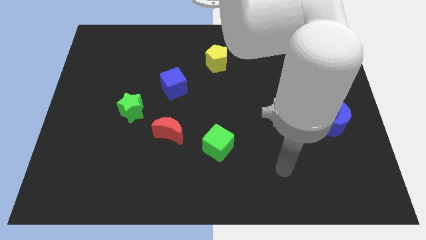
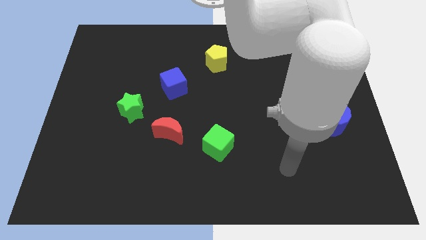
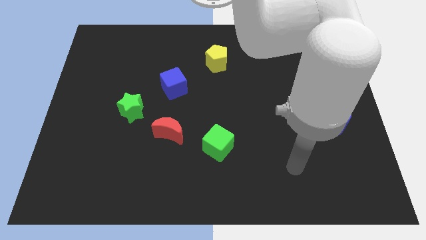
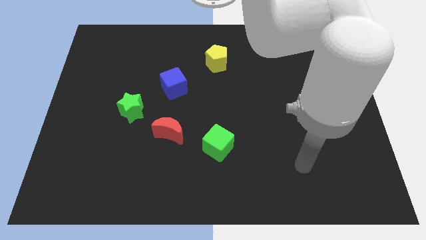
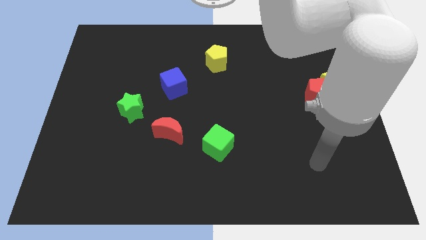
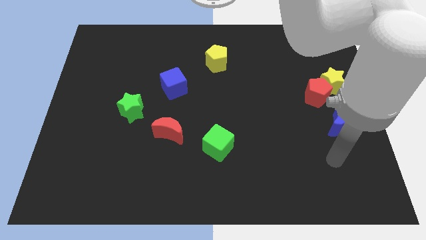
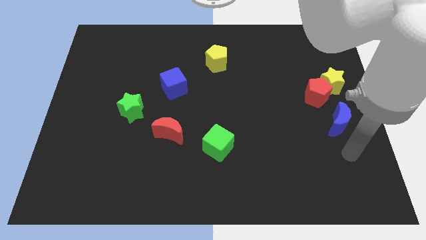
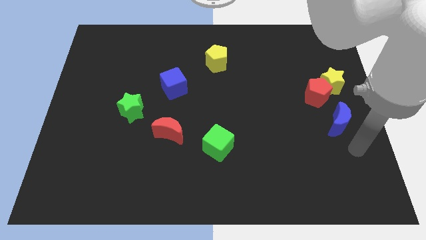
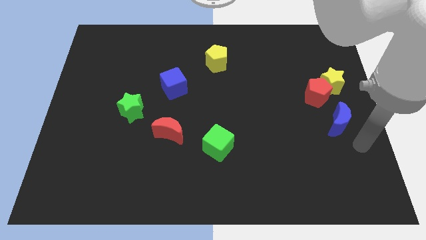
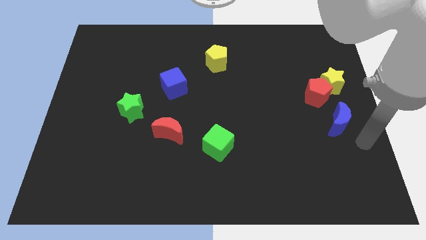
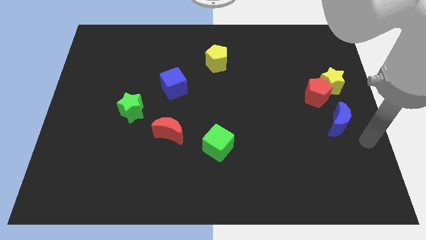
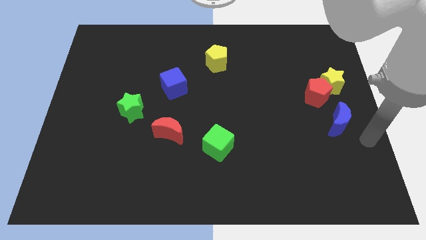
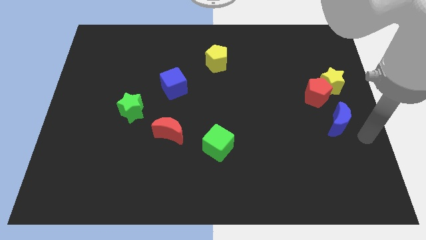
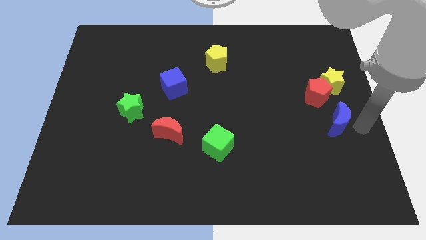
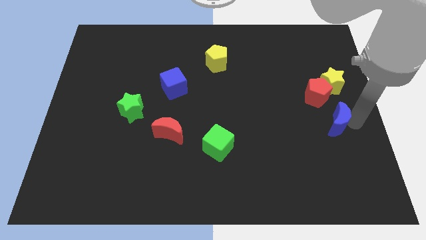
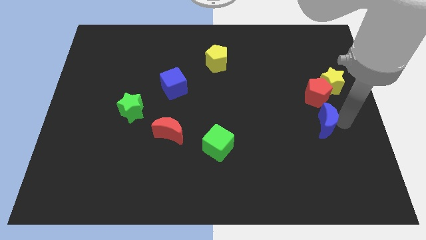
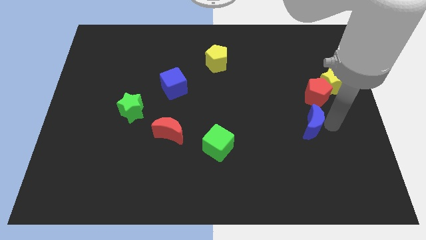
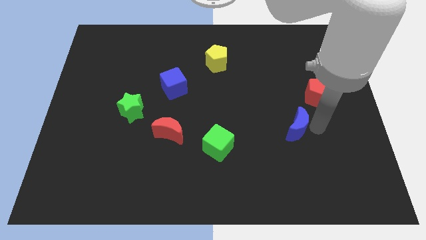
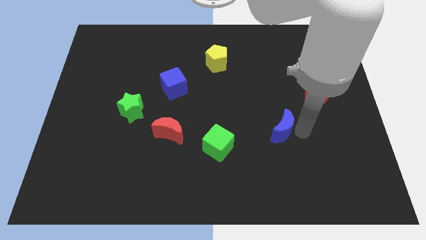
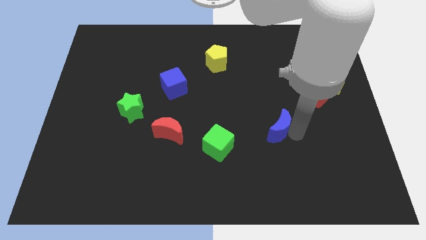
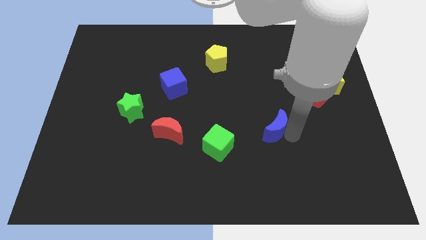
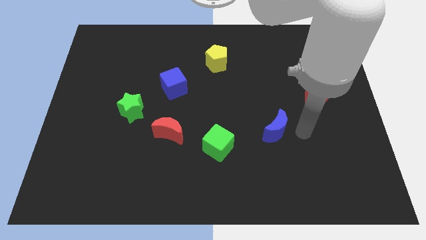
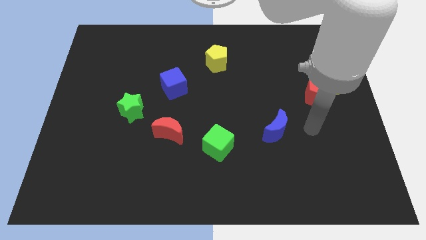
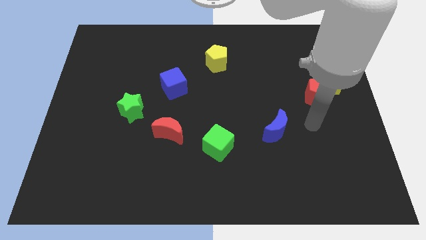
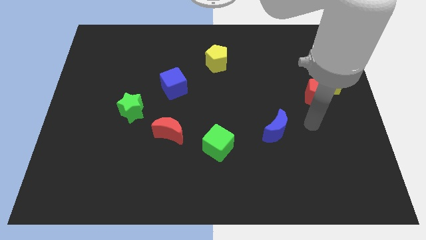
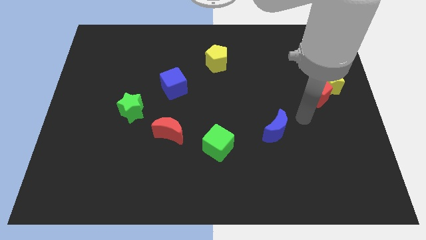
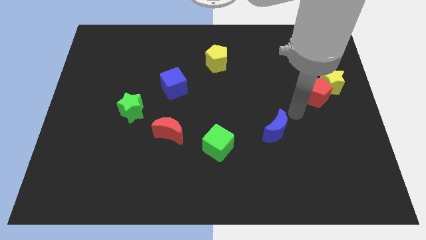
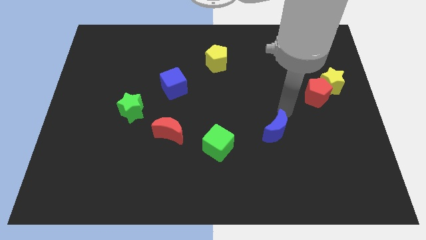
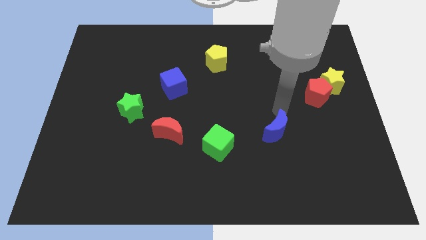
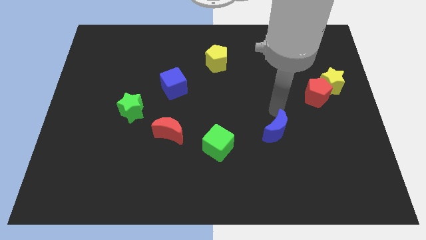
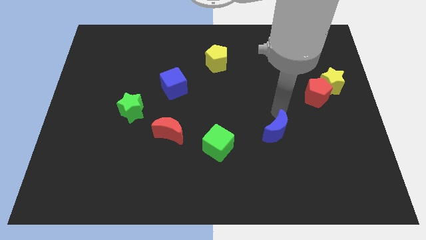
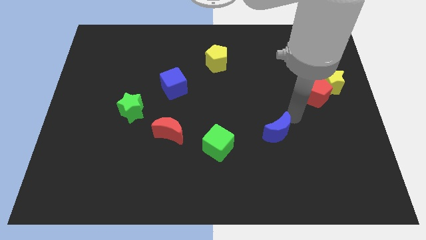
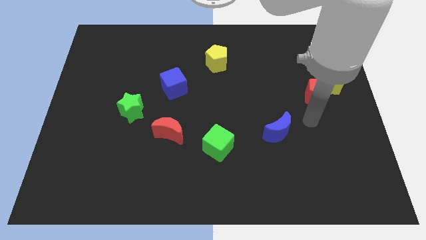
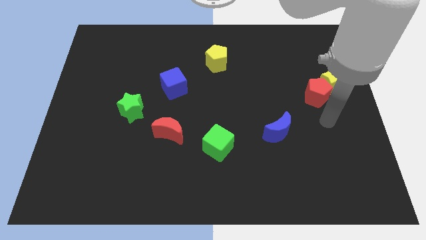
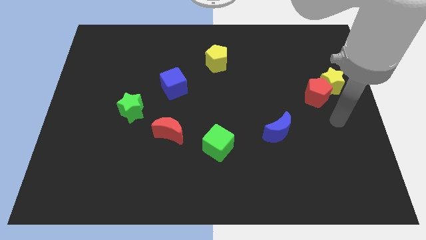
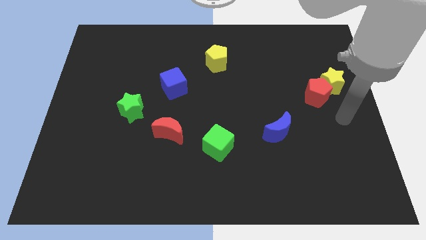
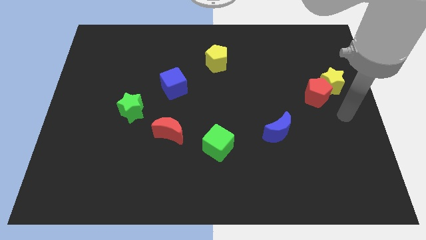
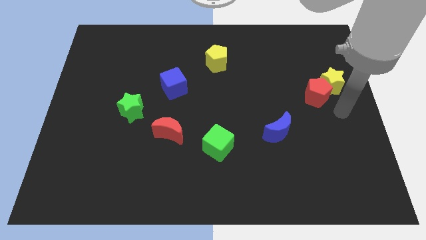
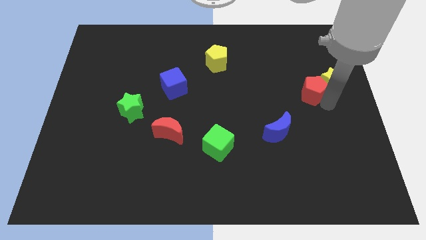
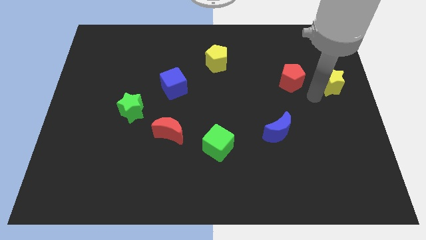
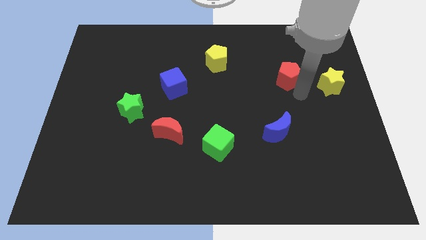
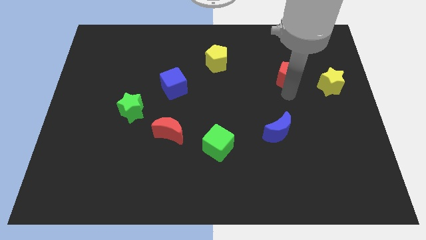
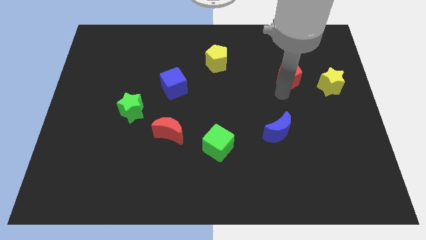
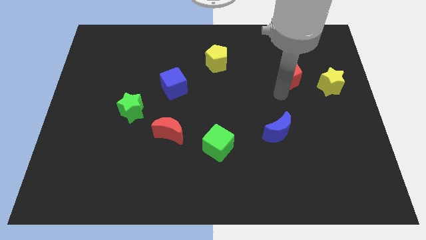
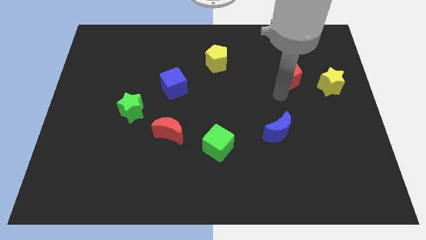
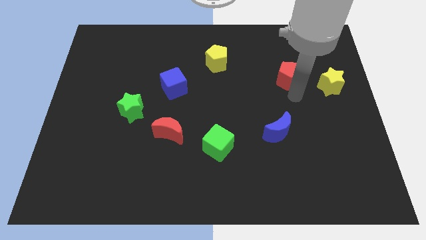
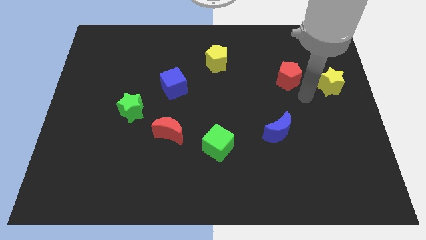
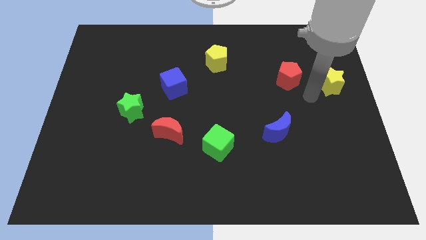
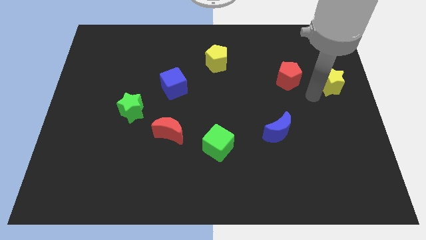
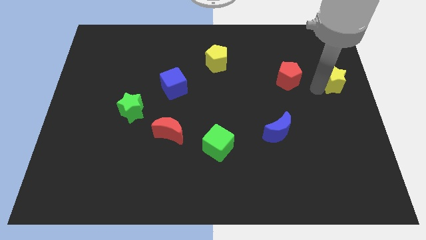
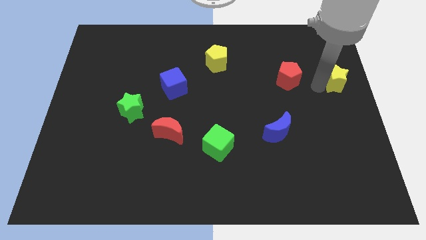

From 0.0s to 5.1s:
push the blue moon and red pentagon to the left side

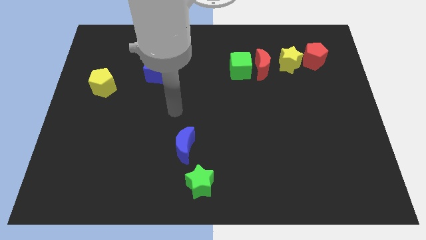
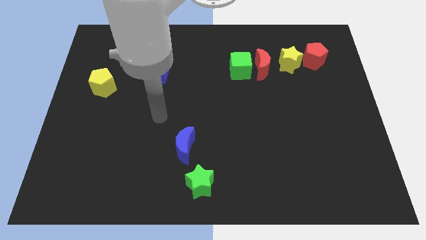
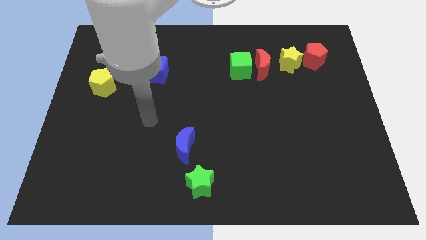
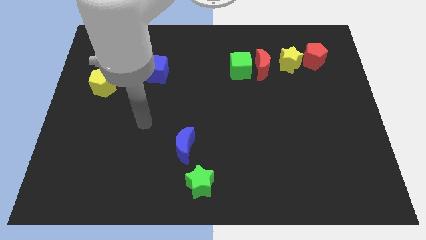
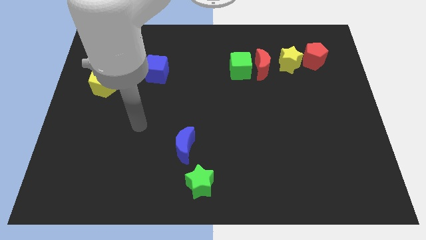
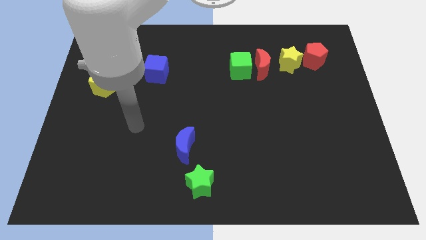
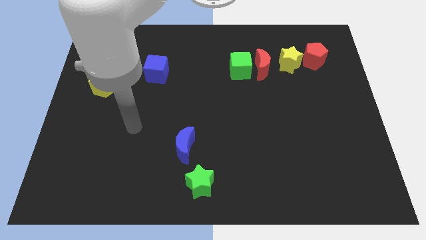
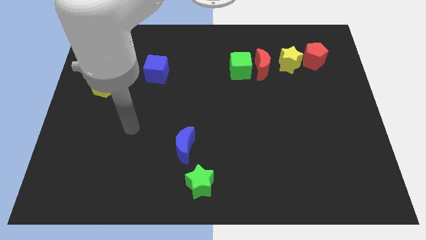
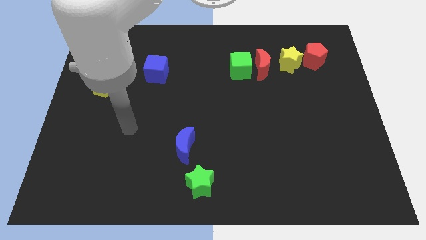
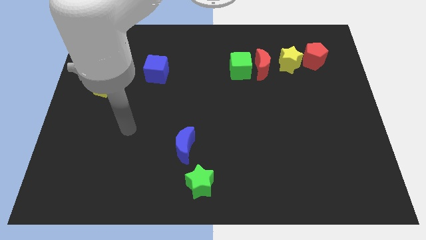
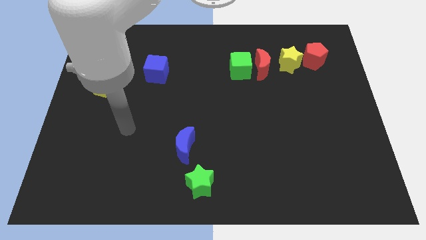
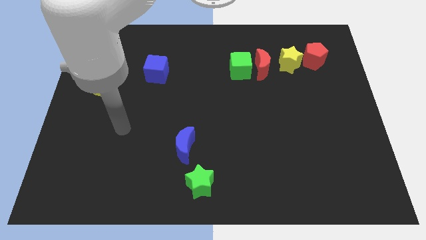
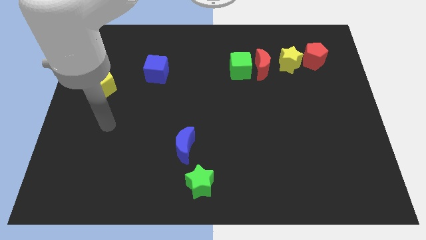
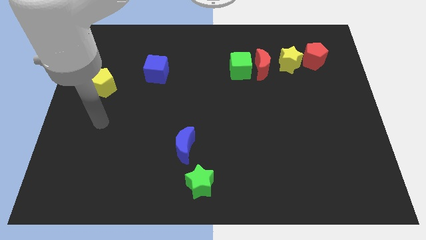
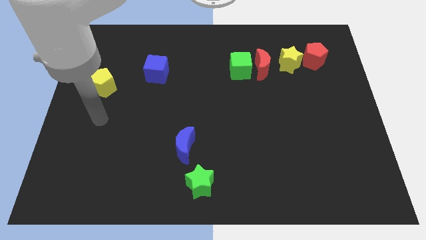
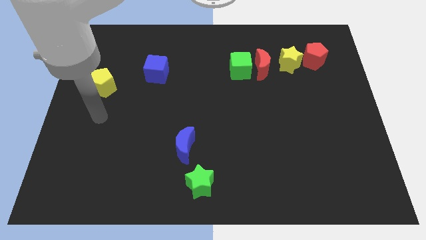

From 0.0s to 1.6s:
put your hand to the bottom of the yellow pentagon

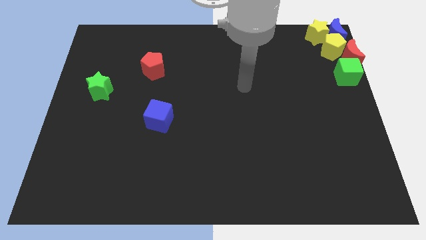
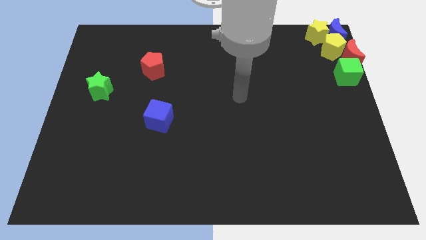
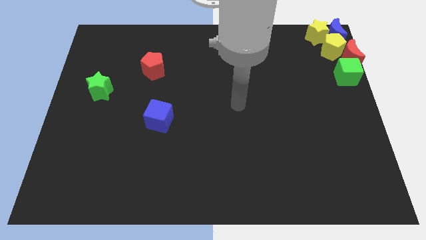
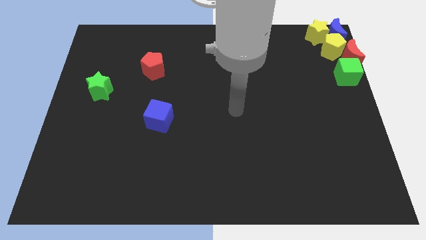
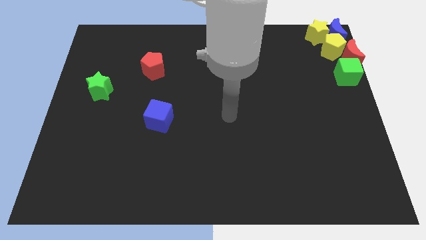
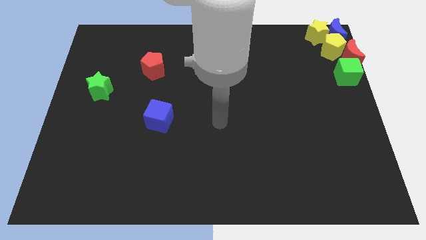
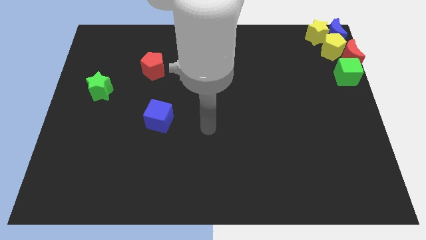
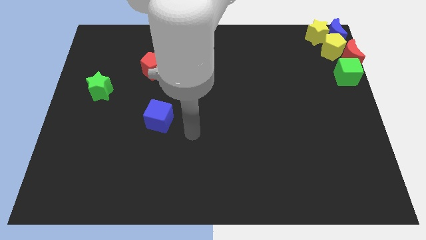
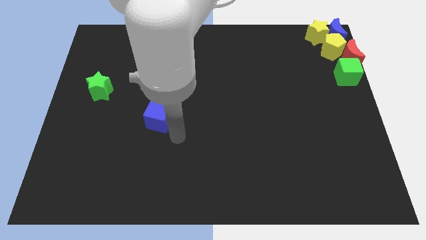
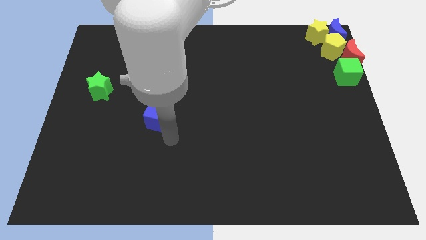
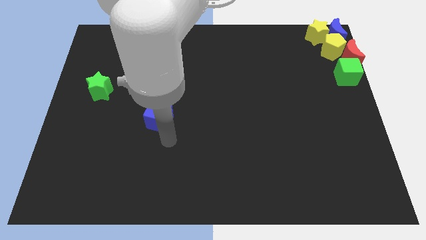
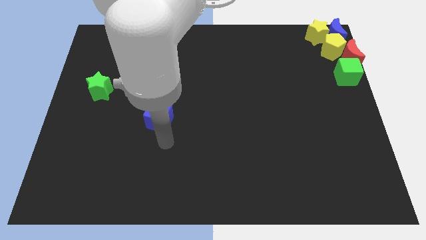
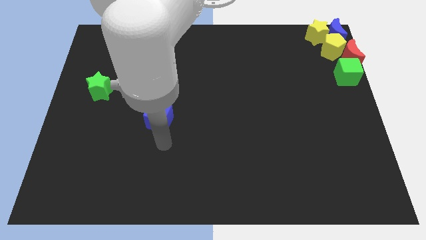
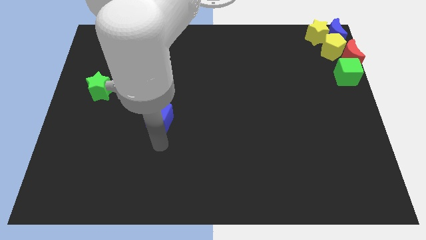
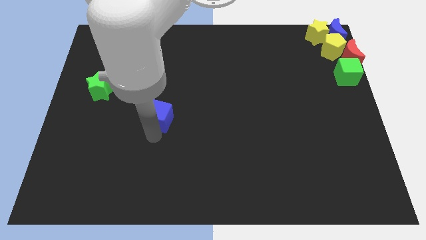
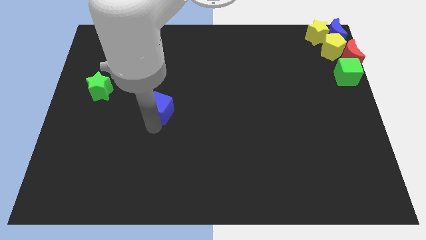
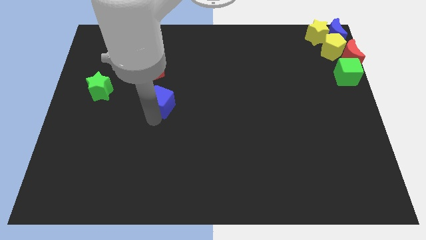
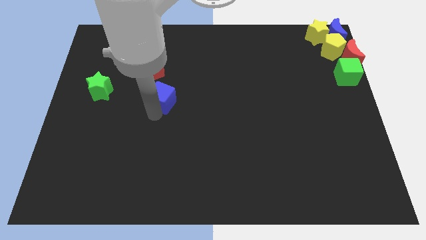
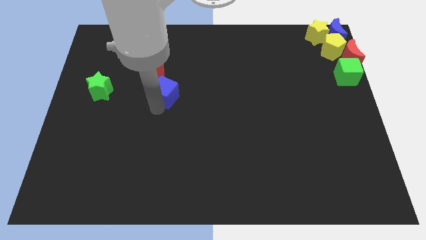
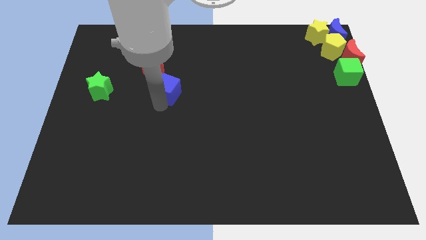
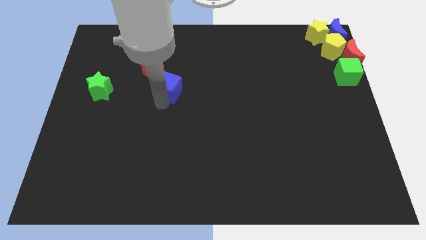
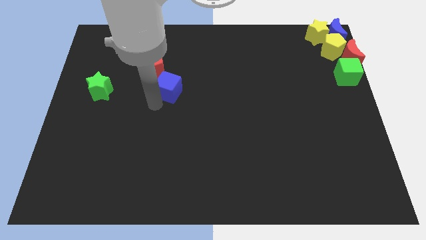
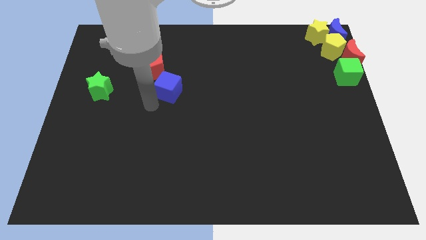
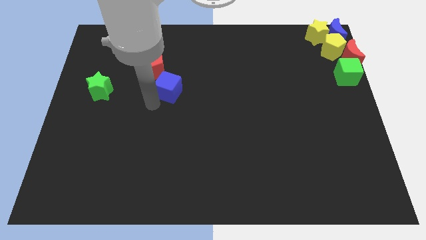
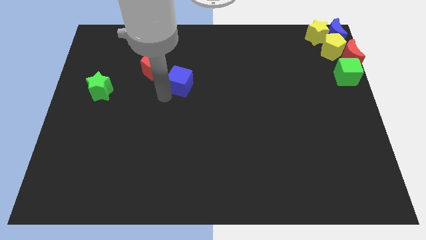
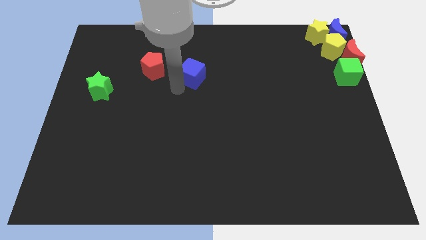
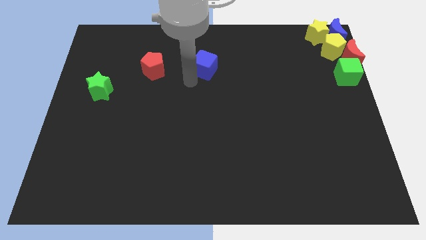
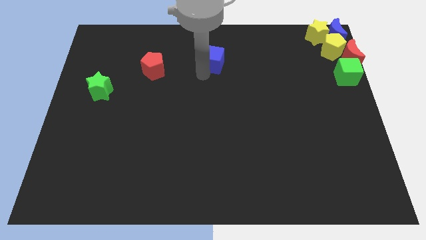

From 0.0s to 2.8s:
slide the blue cube to the right of the red pentagon
